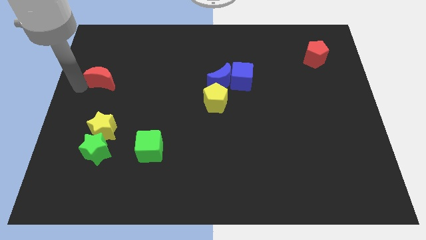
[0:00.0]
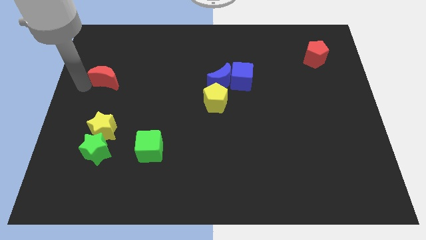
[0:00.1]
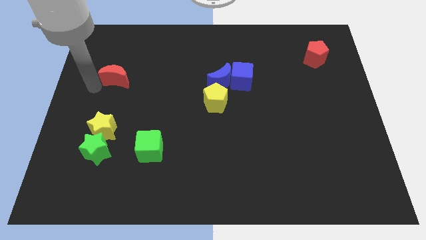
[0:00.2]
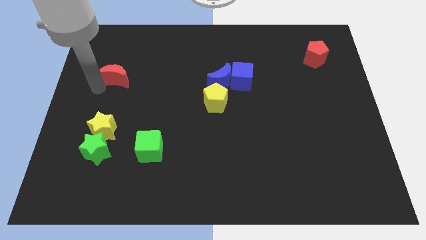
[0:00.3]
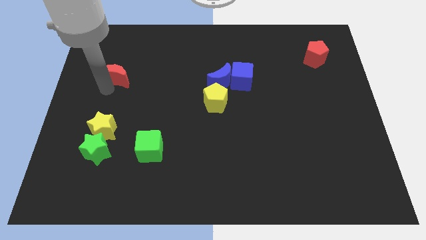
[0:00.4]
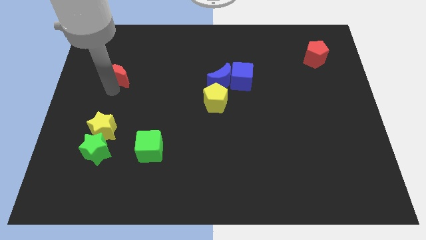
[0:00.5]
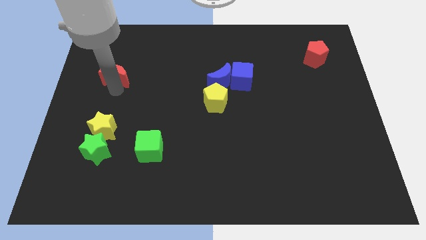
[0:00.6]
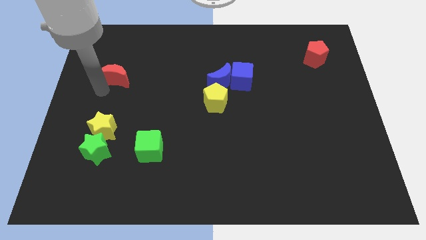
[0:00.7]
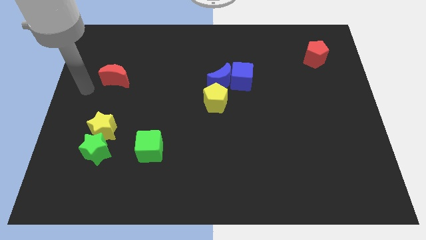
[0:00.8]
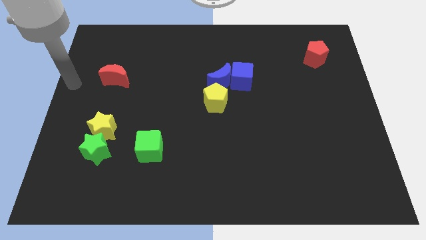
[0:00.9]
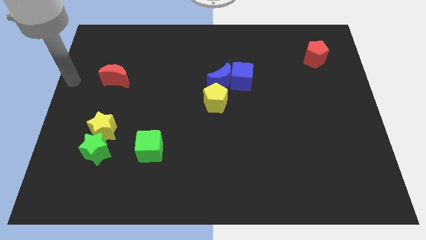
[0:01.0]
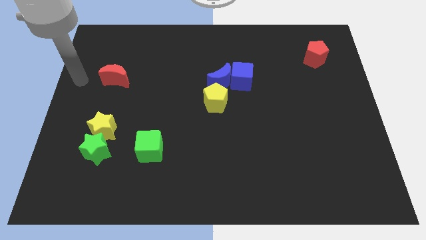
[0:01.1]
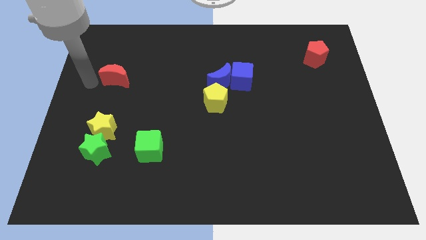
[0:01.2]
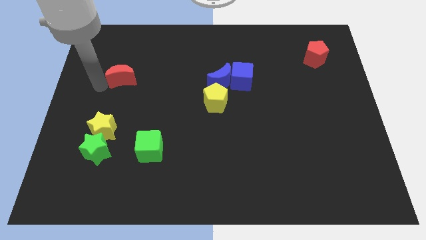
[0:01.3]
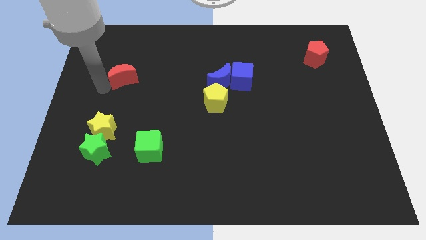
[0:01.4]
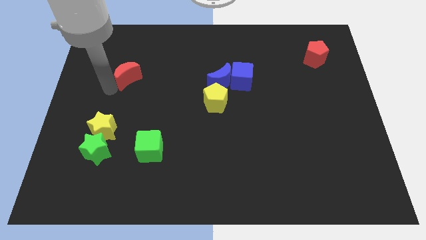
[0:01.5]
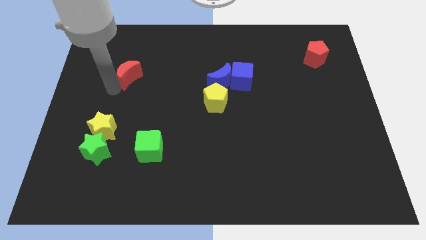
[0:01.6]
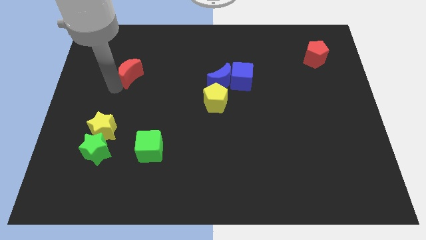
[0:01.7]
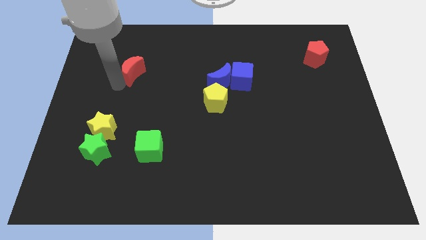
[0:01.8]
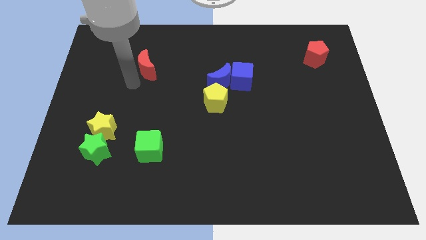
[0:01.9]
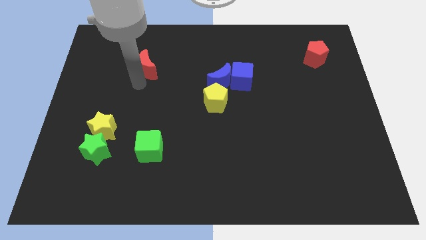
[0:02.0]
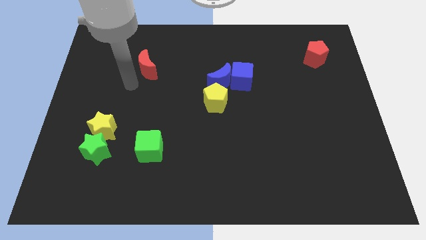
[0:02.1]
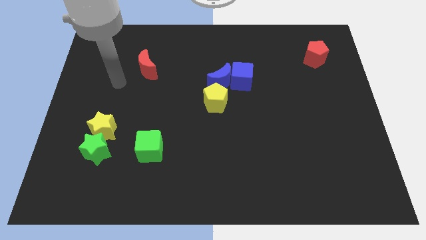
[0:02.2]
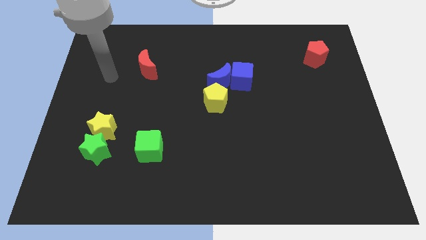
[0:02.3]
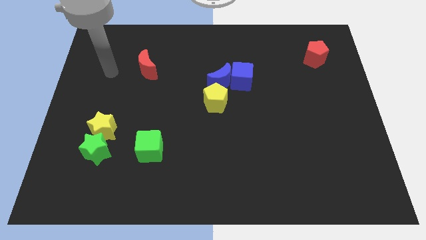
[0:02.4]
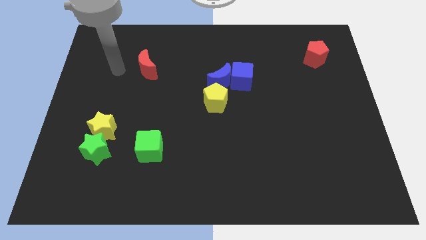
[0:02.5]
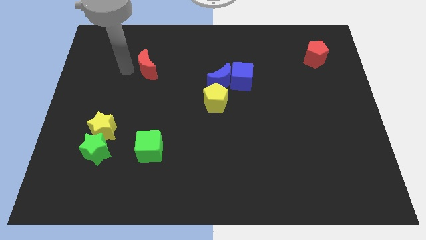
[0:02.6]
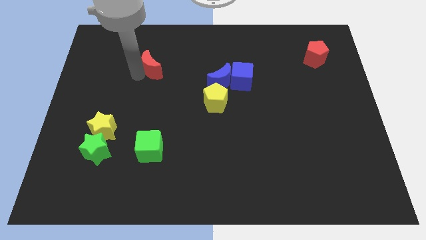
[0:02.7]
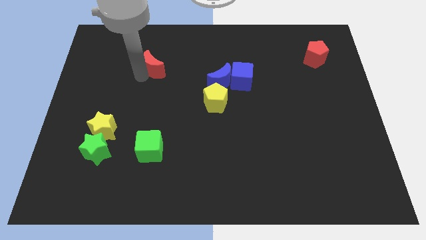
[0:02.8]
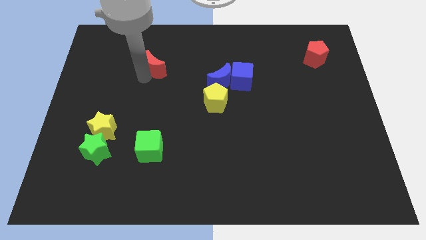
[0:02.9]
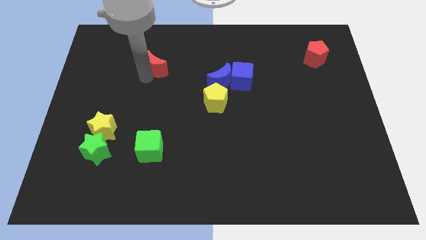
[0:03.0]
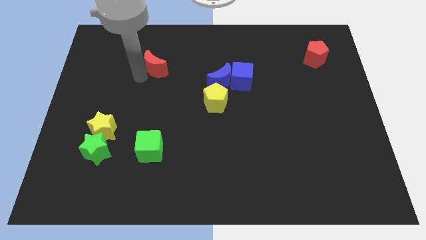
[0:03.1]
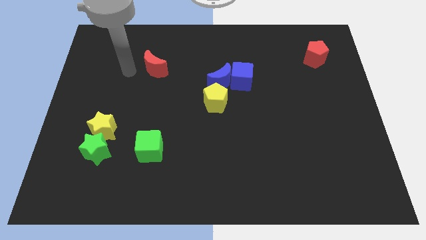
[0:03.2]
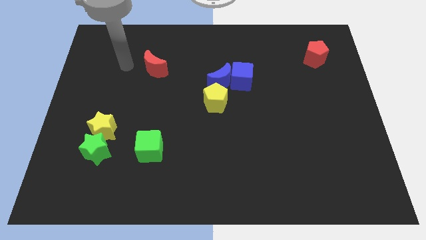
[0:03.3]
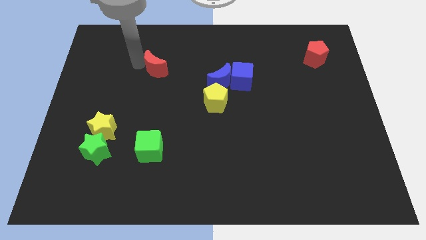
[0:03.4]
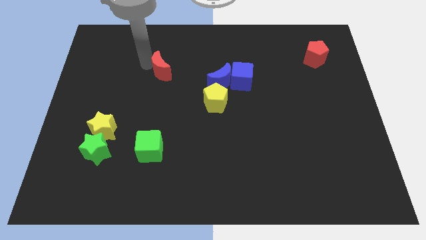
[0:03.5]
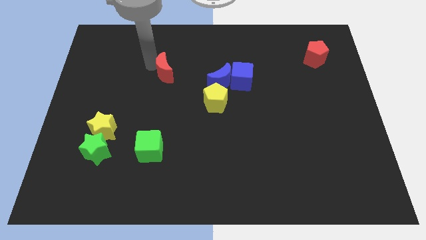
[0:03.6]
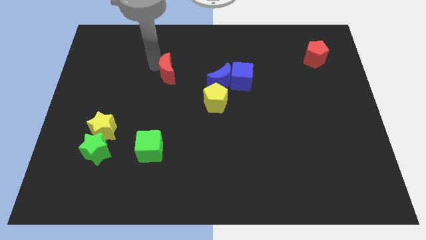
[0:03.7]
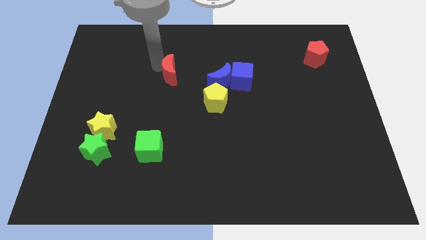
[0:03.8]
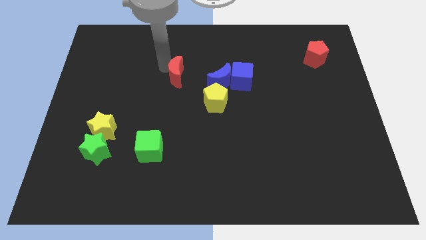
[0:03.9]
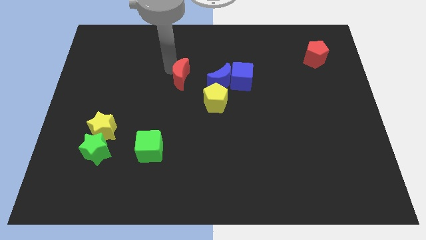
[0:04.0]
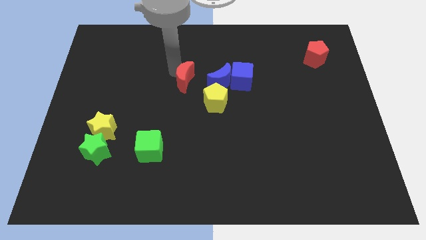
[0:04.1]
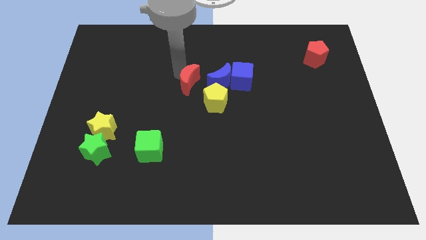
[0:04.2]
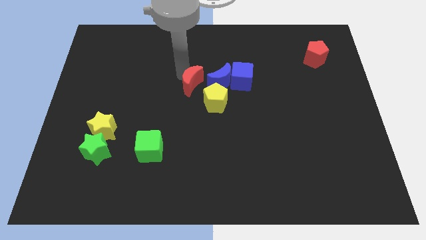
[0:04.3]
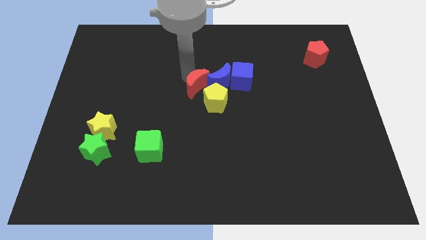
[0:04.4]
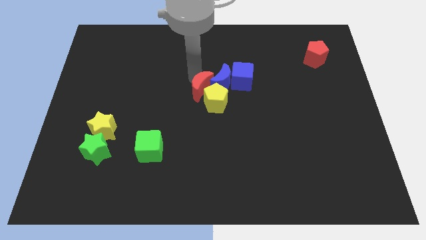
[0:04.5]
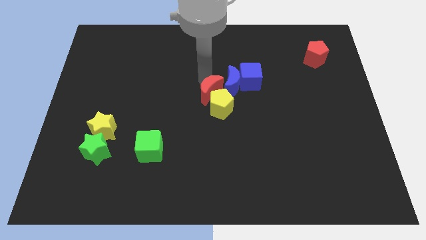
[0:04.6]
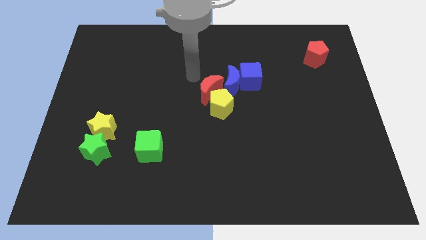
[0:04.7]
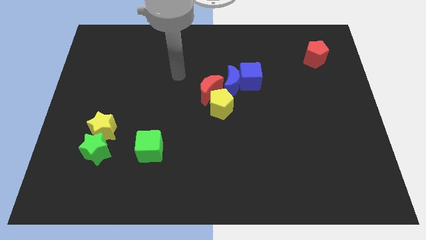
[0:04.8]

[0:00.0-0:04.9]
move the red moon to the center

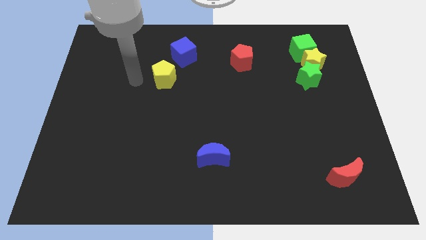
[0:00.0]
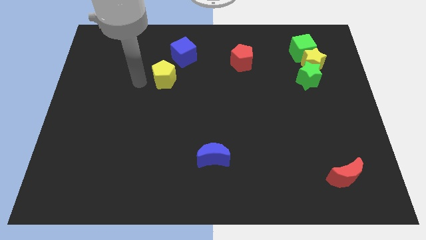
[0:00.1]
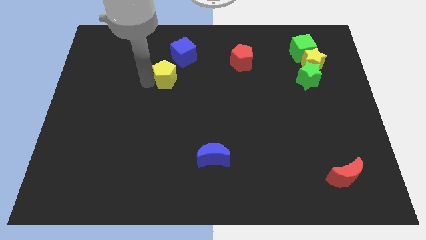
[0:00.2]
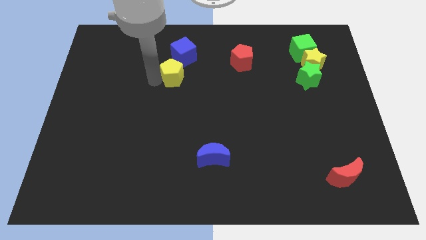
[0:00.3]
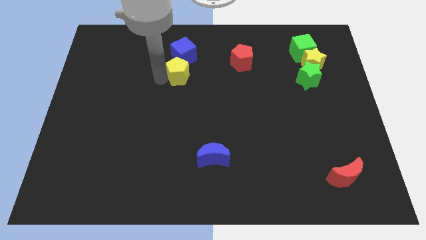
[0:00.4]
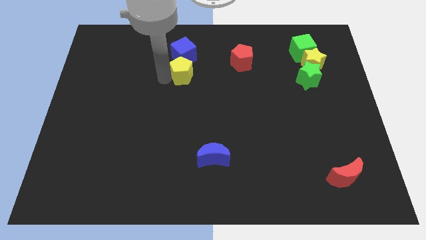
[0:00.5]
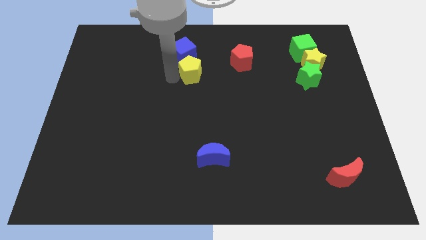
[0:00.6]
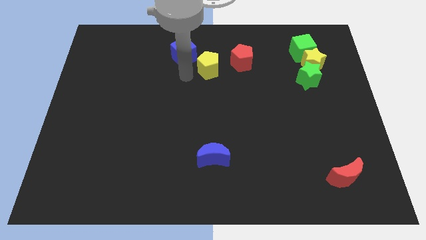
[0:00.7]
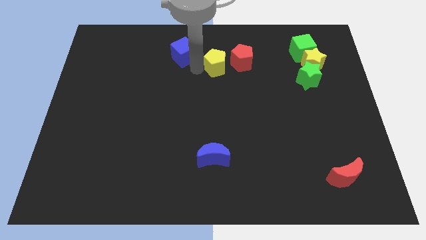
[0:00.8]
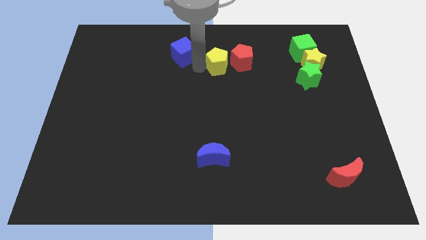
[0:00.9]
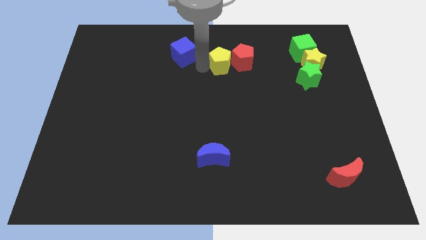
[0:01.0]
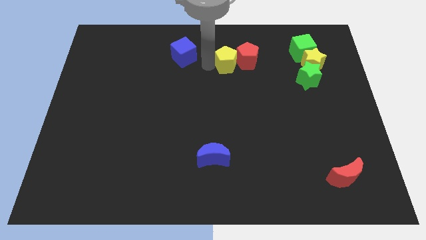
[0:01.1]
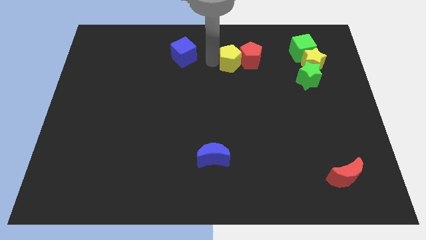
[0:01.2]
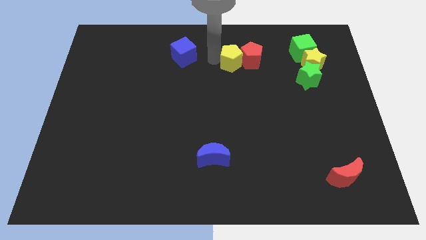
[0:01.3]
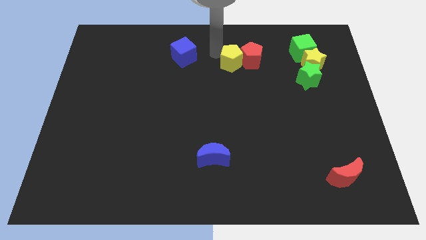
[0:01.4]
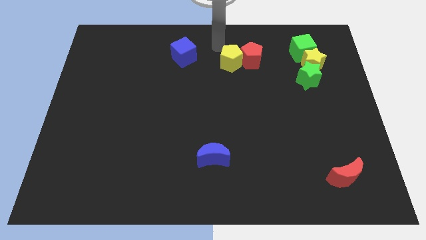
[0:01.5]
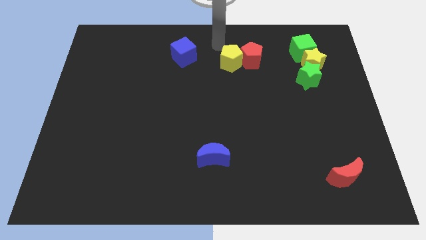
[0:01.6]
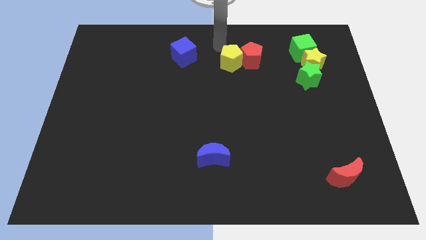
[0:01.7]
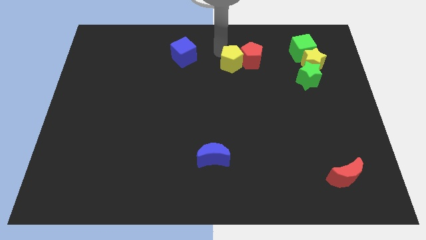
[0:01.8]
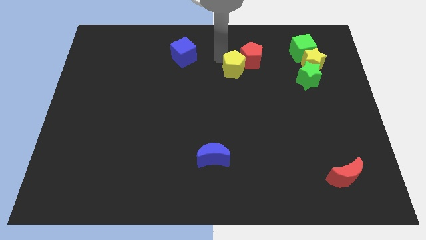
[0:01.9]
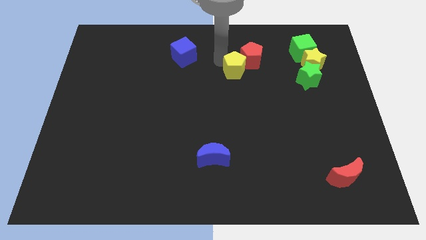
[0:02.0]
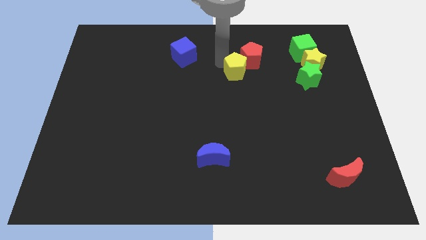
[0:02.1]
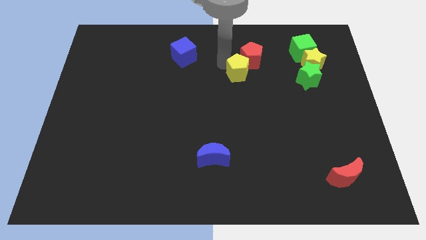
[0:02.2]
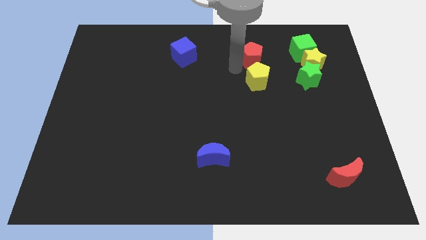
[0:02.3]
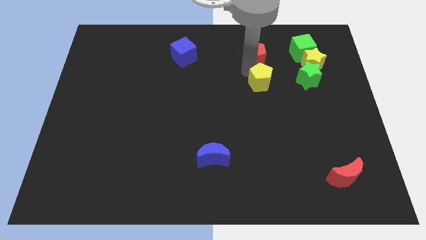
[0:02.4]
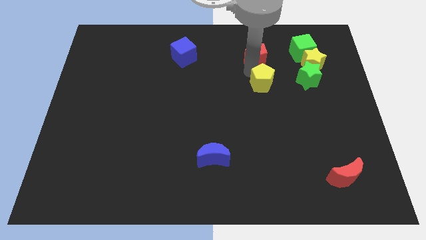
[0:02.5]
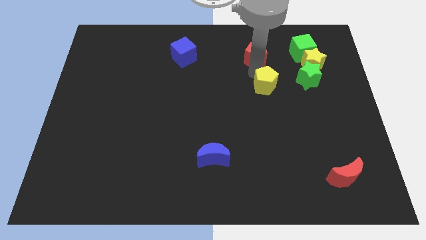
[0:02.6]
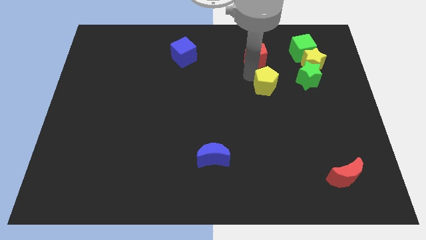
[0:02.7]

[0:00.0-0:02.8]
place the yellow pentagon to the left of the green star

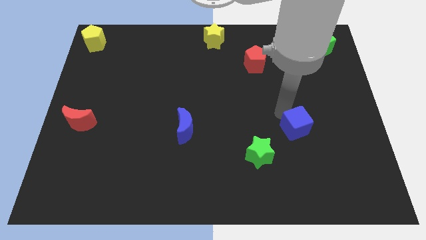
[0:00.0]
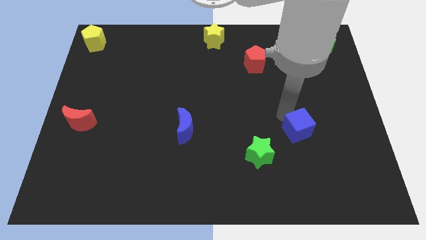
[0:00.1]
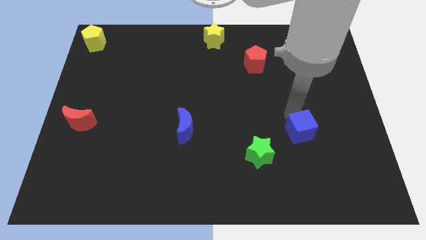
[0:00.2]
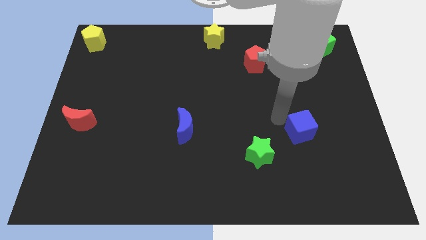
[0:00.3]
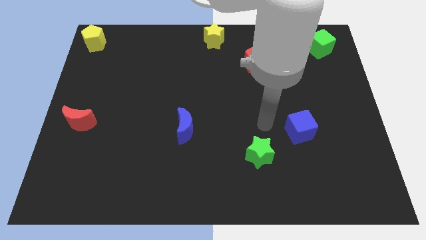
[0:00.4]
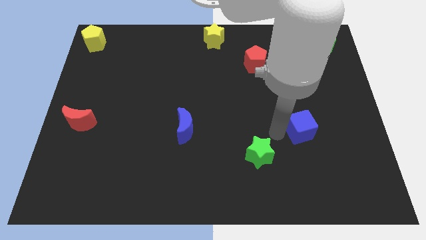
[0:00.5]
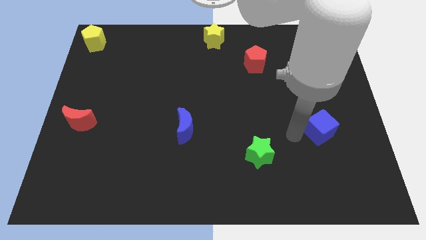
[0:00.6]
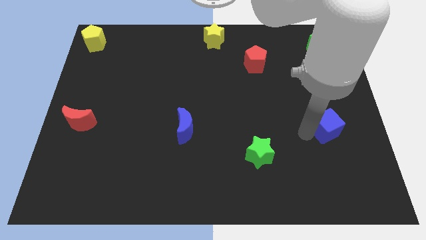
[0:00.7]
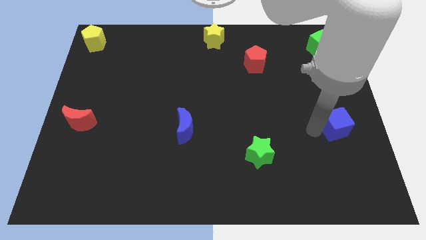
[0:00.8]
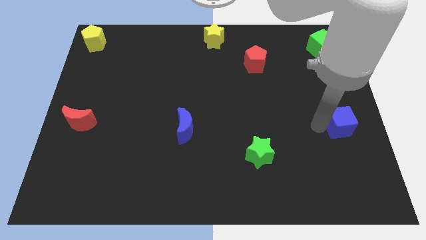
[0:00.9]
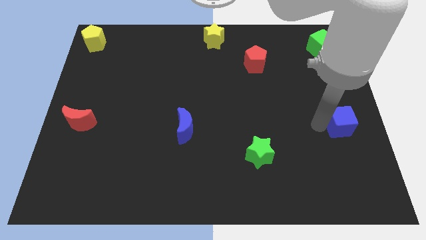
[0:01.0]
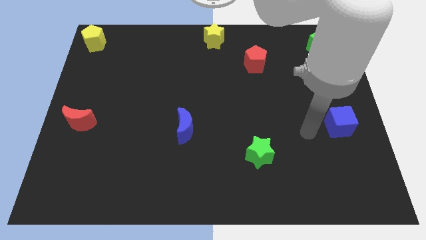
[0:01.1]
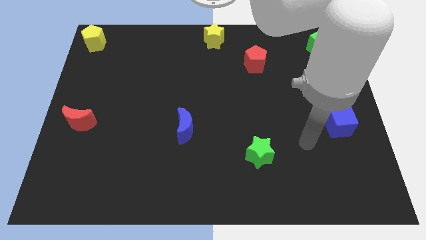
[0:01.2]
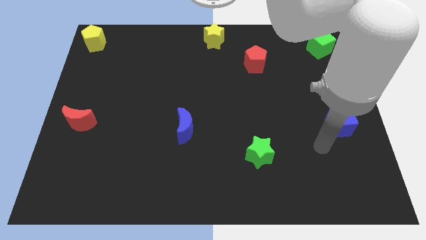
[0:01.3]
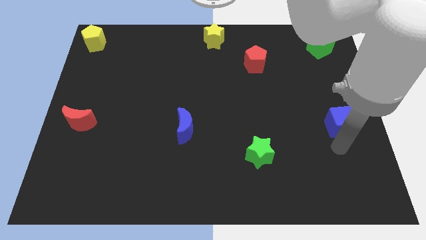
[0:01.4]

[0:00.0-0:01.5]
push the blue cube to the right of the board
